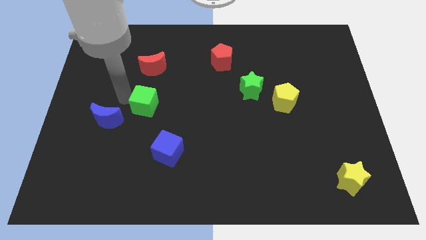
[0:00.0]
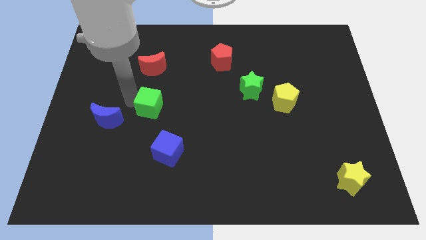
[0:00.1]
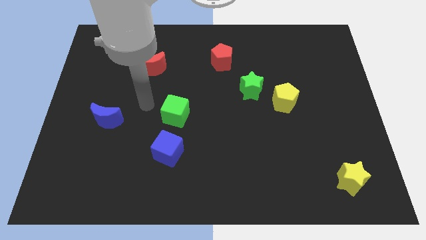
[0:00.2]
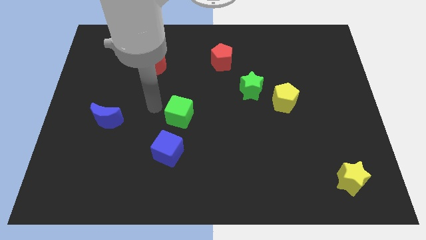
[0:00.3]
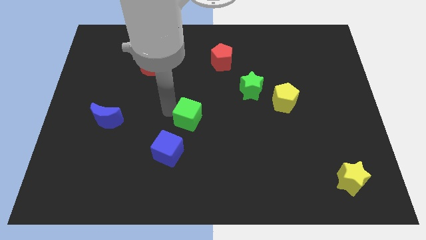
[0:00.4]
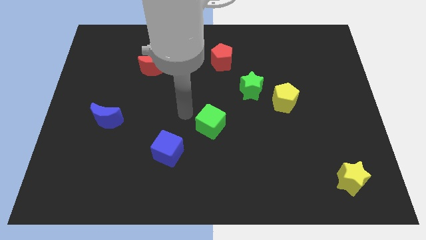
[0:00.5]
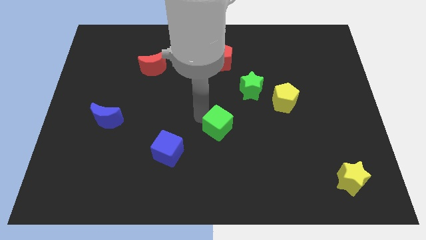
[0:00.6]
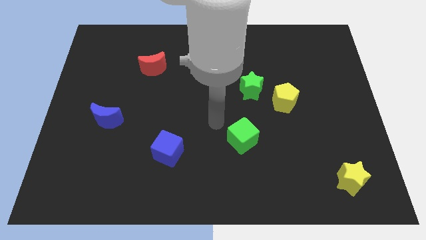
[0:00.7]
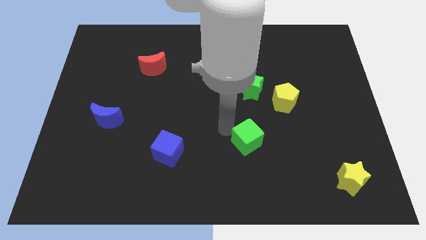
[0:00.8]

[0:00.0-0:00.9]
drag green cube towards right side of the table

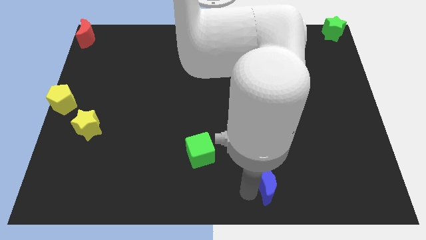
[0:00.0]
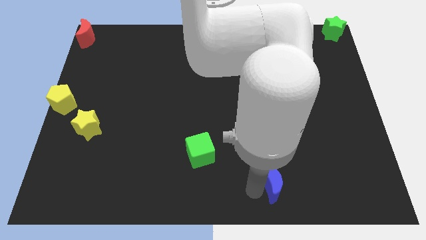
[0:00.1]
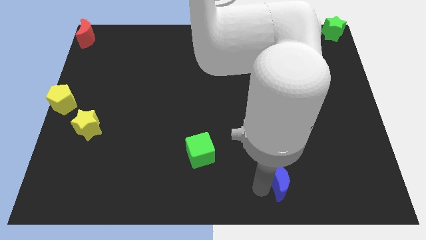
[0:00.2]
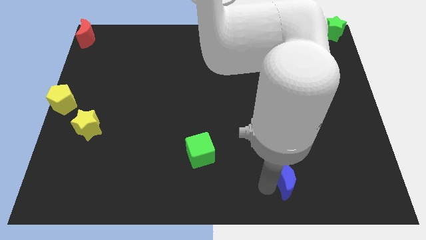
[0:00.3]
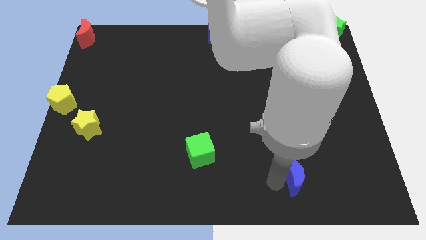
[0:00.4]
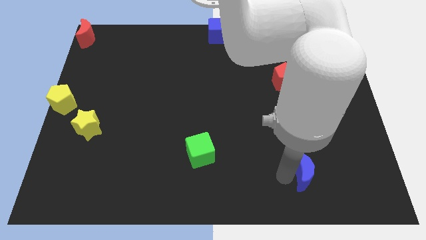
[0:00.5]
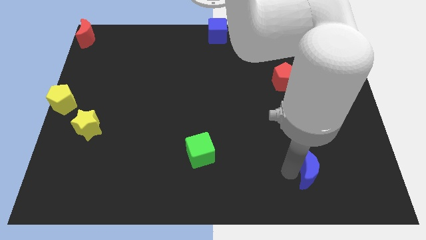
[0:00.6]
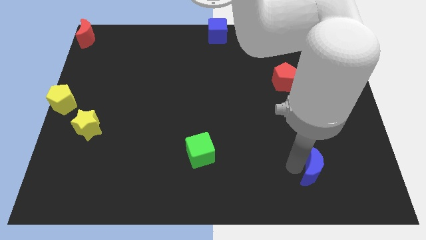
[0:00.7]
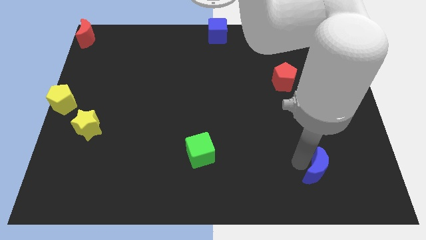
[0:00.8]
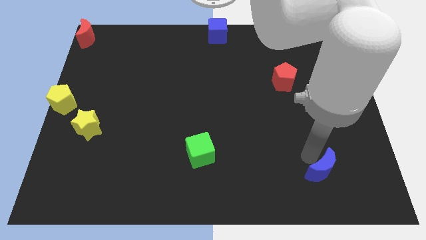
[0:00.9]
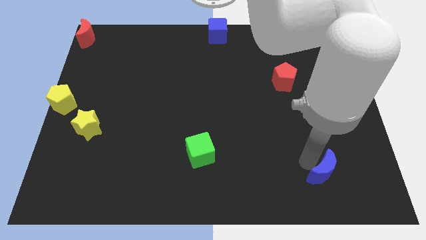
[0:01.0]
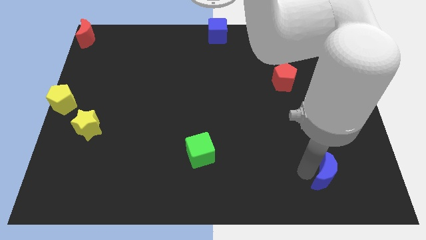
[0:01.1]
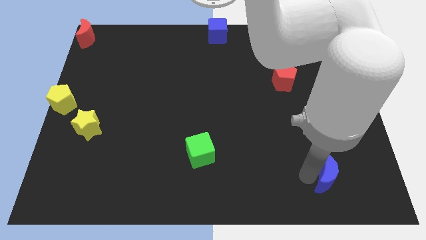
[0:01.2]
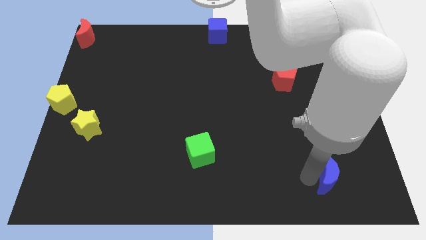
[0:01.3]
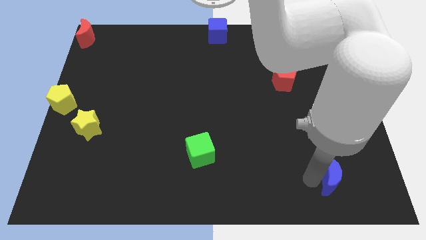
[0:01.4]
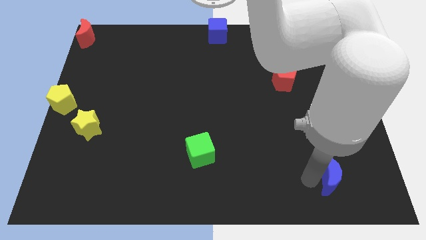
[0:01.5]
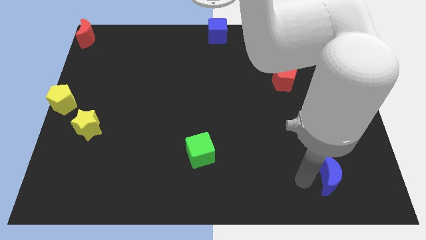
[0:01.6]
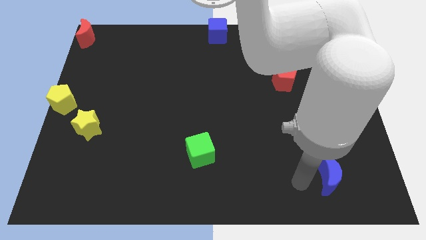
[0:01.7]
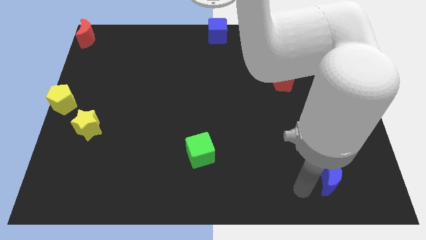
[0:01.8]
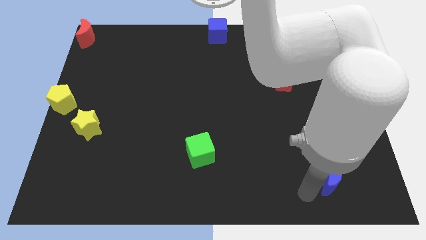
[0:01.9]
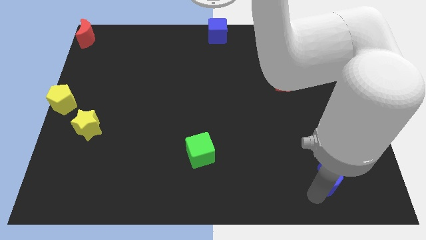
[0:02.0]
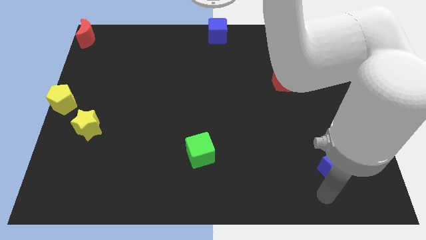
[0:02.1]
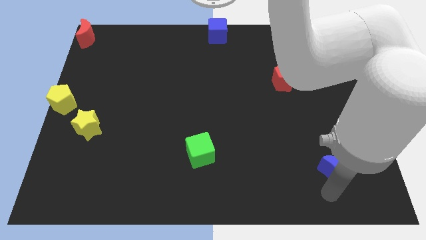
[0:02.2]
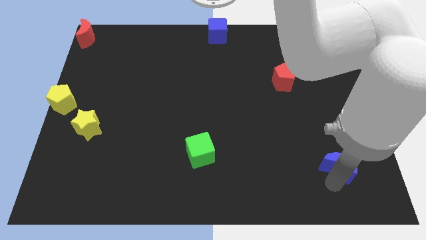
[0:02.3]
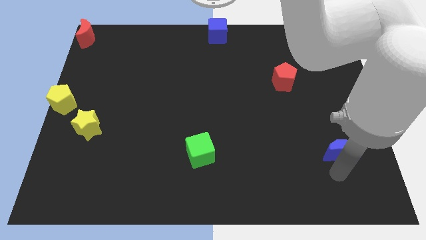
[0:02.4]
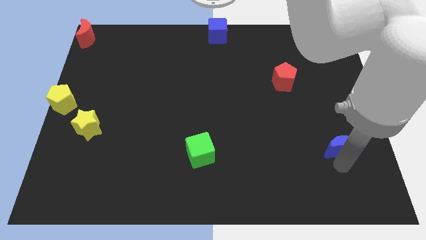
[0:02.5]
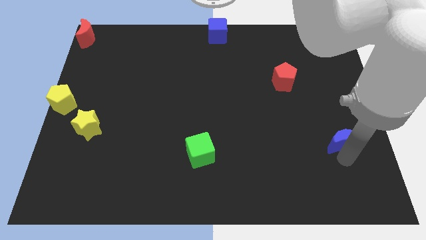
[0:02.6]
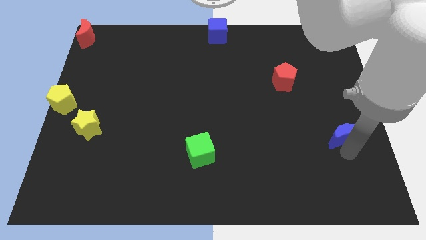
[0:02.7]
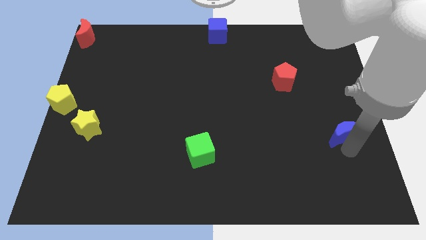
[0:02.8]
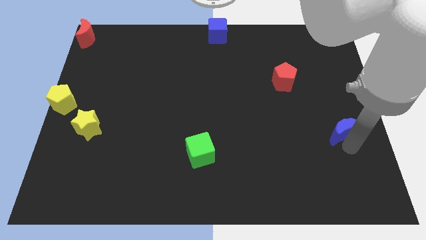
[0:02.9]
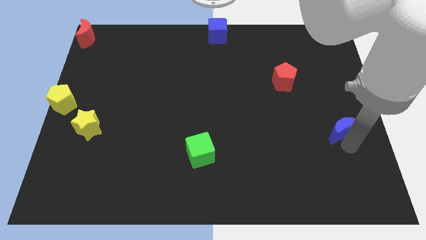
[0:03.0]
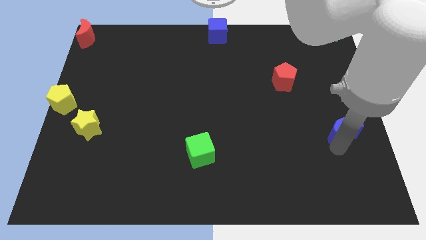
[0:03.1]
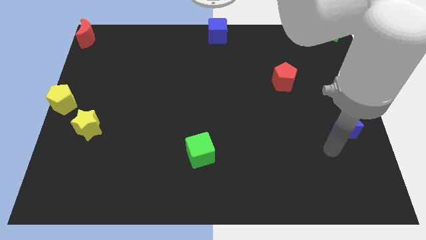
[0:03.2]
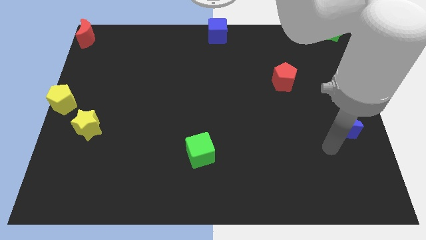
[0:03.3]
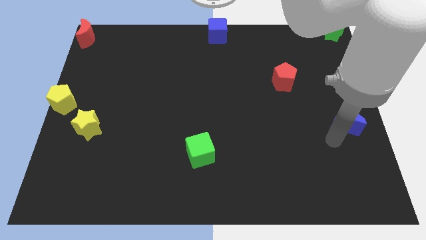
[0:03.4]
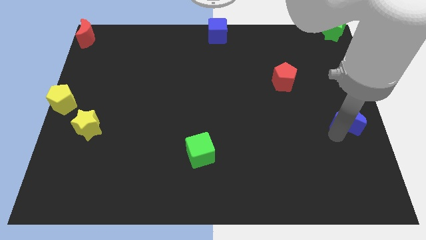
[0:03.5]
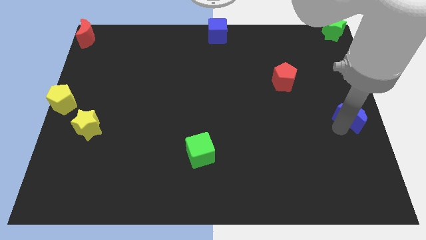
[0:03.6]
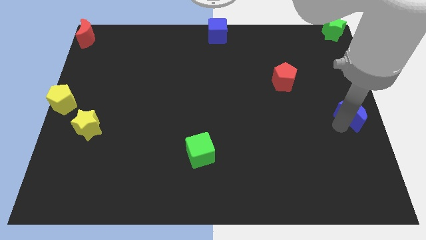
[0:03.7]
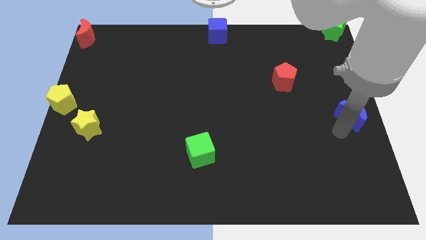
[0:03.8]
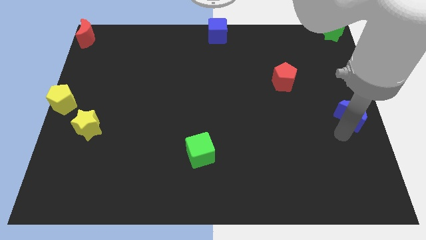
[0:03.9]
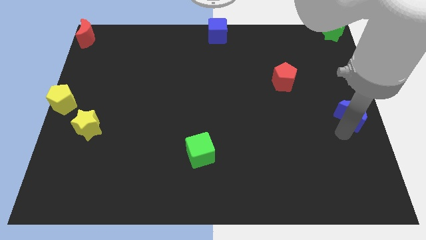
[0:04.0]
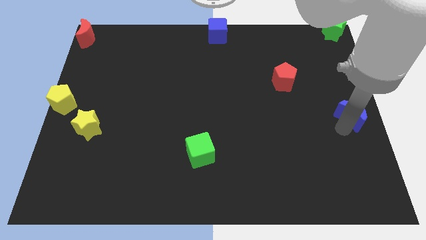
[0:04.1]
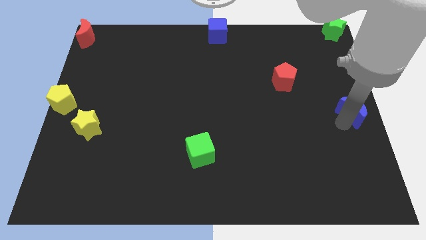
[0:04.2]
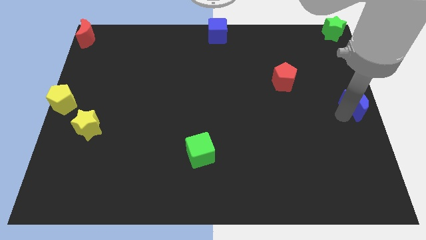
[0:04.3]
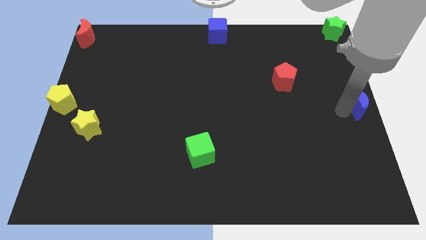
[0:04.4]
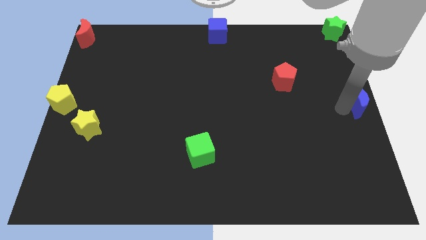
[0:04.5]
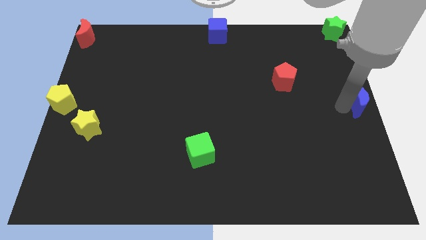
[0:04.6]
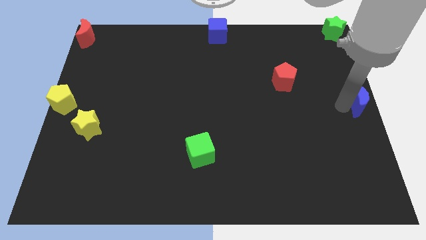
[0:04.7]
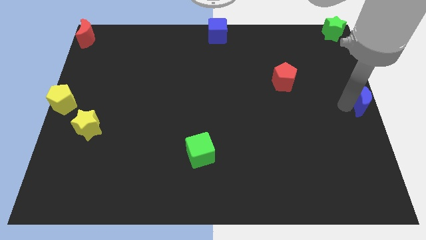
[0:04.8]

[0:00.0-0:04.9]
move the blue moon vertical below green star

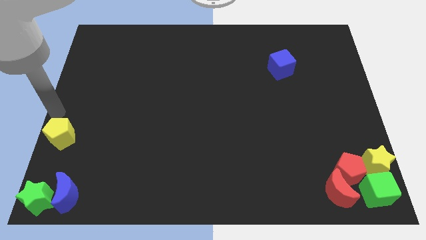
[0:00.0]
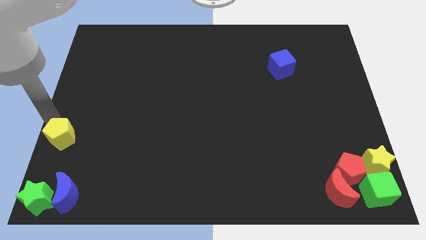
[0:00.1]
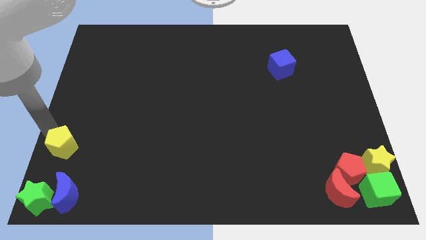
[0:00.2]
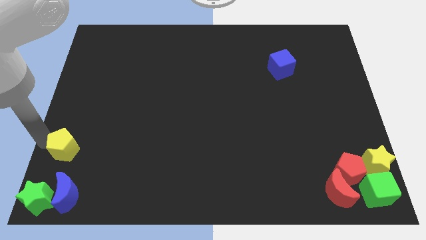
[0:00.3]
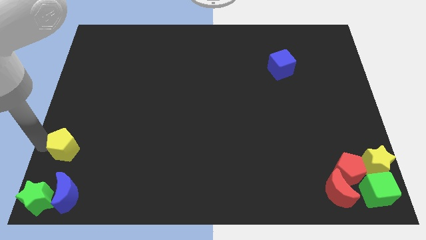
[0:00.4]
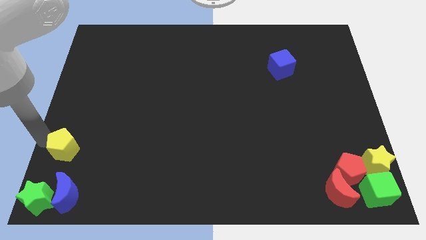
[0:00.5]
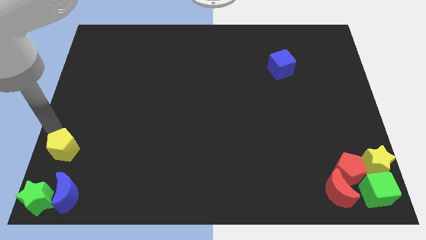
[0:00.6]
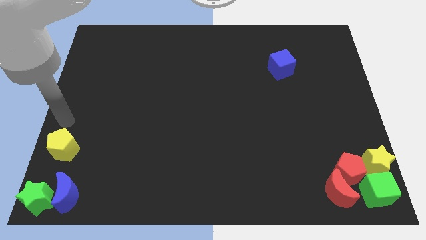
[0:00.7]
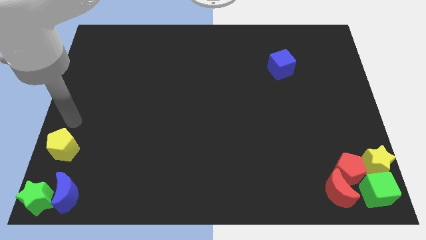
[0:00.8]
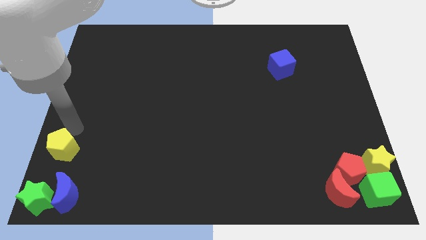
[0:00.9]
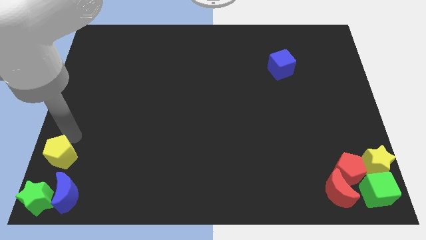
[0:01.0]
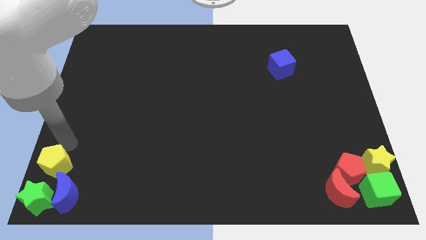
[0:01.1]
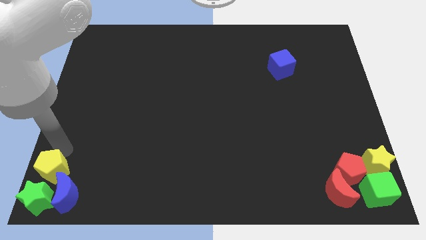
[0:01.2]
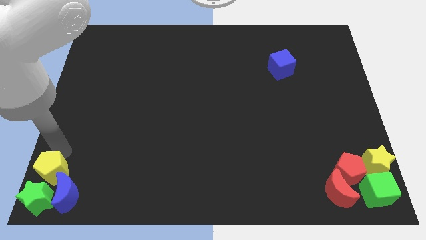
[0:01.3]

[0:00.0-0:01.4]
place the yellow pentagon to the top of the green star

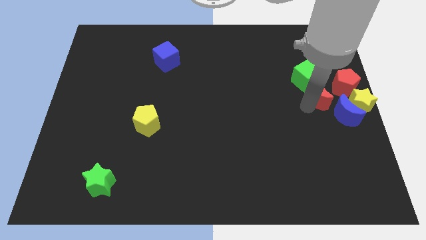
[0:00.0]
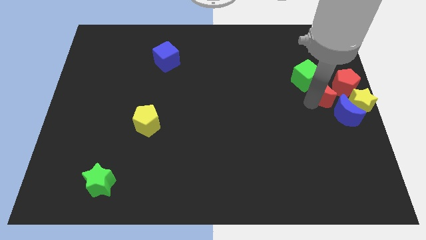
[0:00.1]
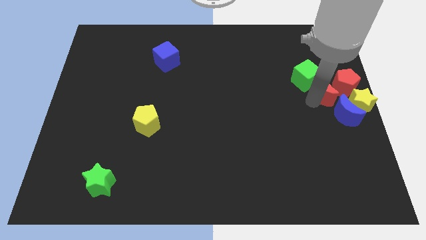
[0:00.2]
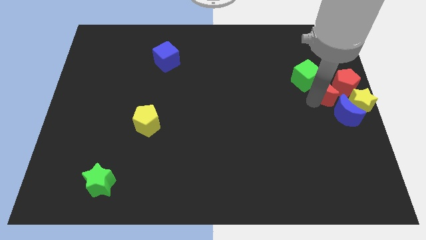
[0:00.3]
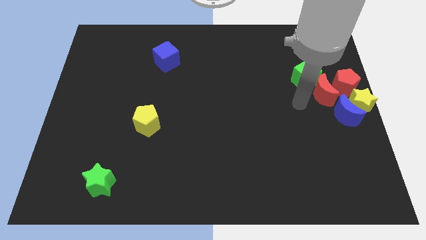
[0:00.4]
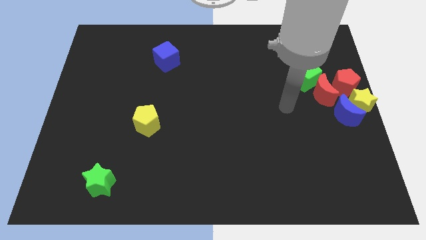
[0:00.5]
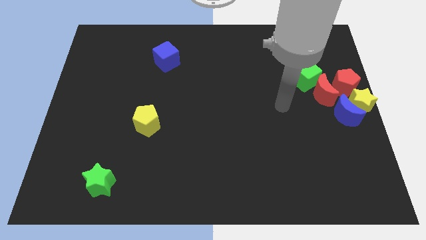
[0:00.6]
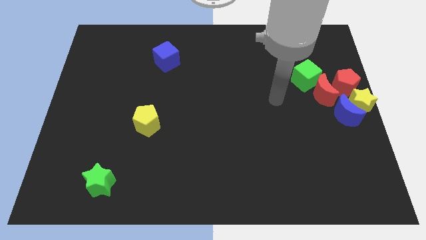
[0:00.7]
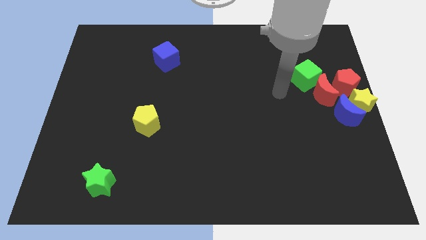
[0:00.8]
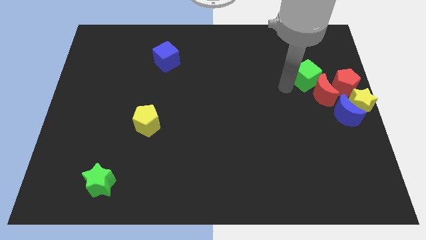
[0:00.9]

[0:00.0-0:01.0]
move red moon into red pentagon

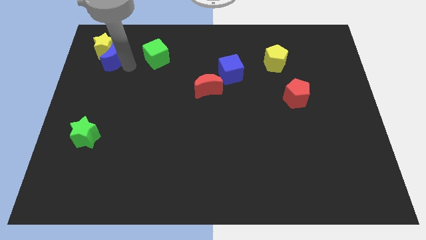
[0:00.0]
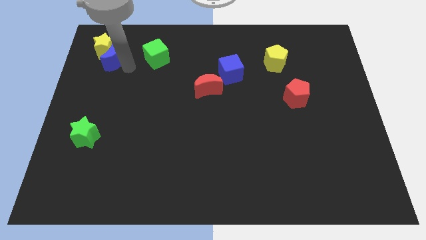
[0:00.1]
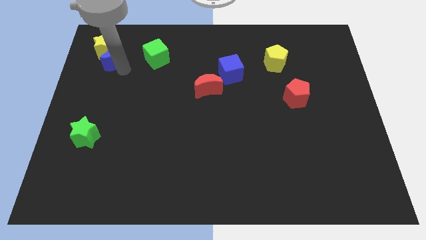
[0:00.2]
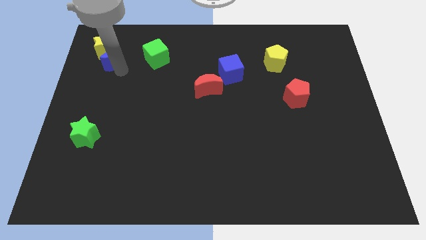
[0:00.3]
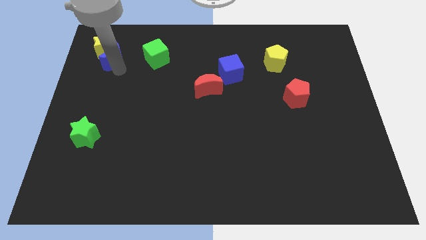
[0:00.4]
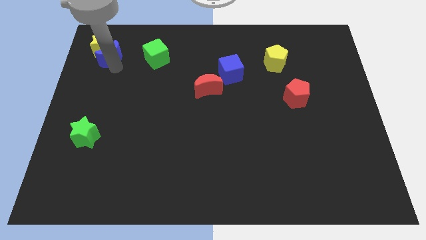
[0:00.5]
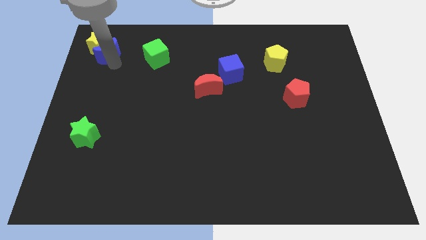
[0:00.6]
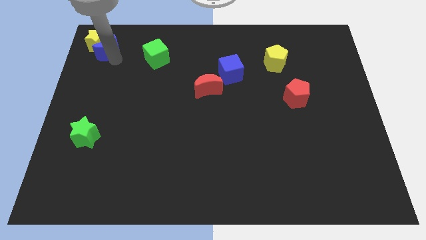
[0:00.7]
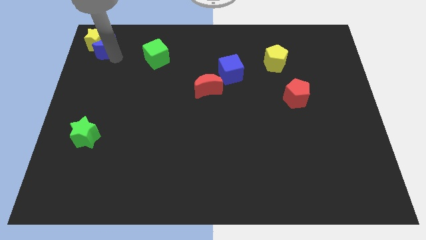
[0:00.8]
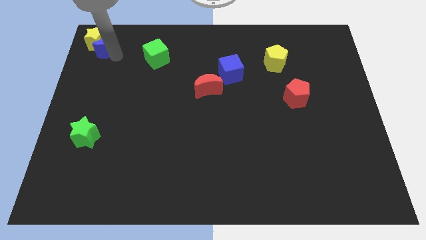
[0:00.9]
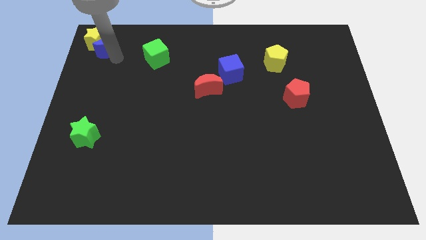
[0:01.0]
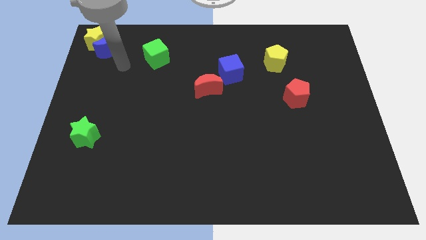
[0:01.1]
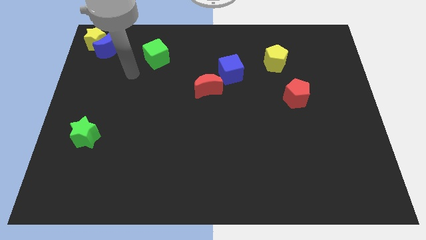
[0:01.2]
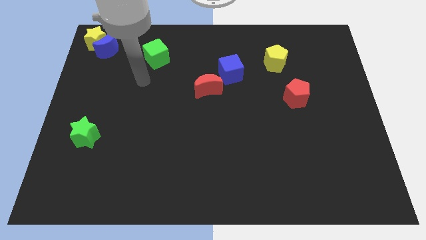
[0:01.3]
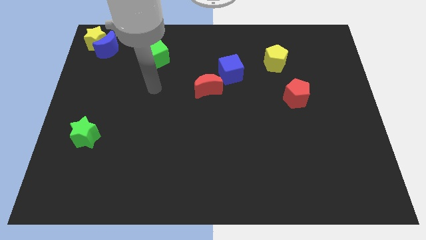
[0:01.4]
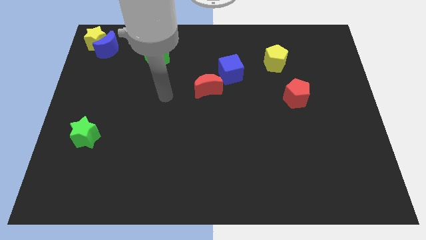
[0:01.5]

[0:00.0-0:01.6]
move the yellow star with blue crescent to the top left corner
